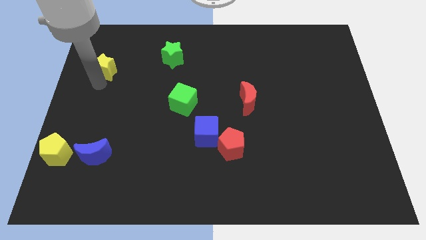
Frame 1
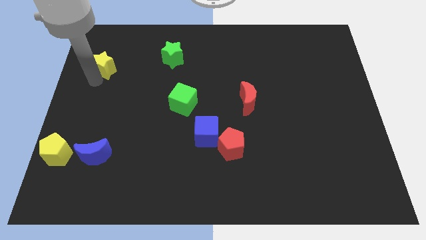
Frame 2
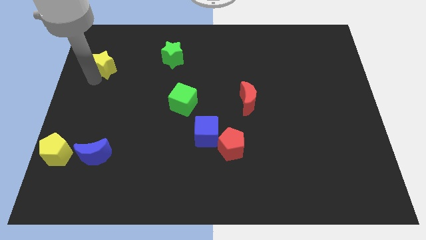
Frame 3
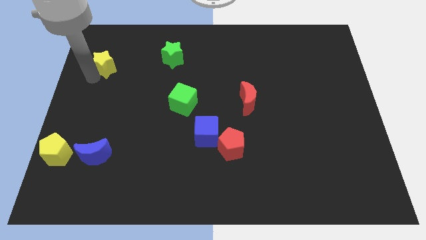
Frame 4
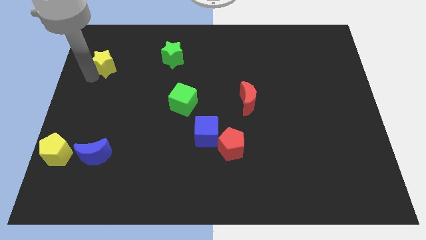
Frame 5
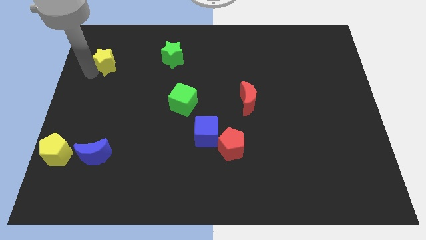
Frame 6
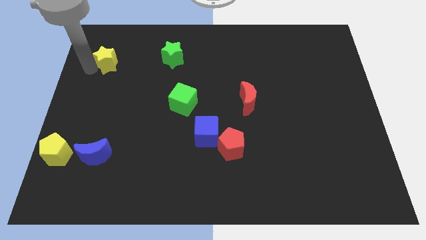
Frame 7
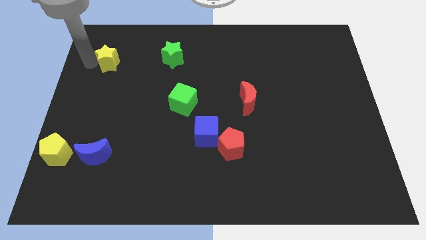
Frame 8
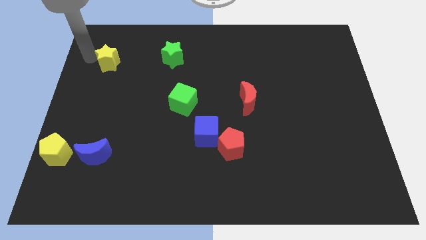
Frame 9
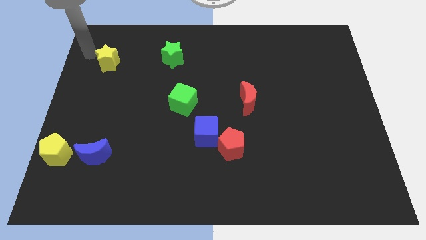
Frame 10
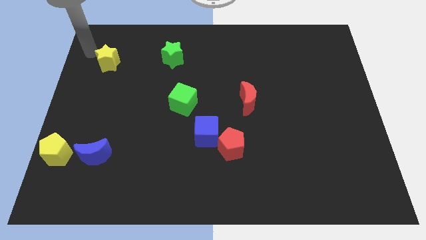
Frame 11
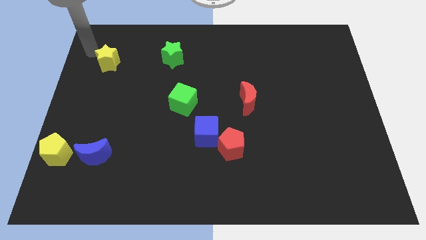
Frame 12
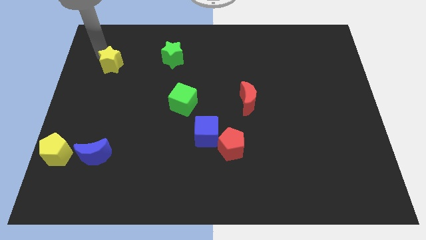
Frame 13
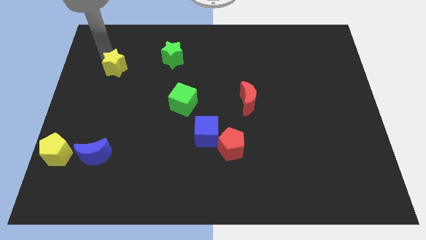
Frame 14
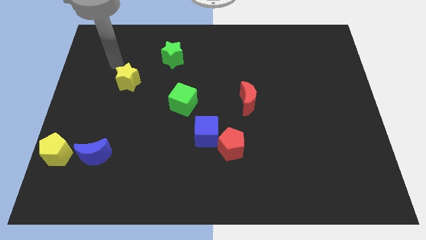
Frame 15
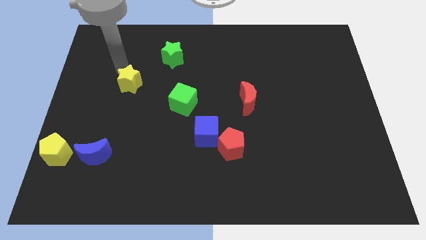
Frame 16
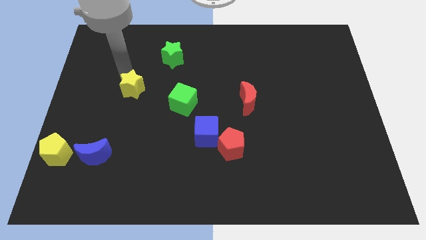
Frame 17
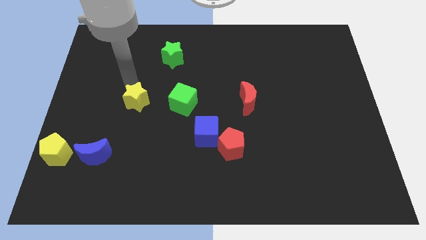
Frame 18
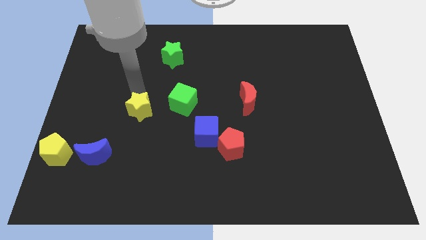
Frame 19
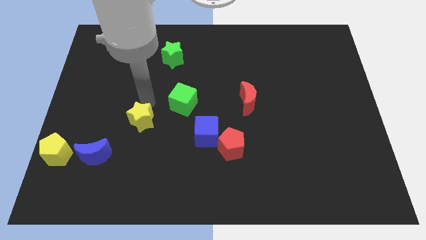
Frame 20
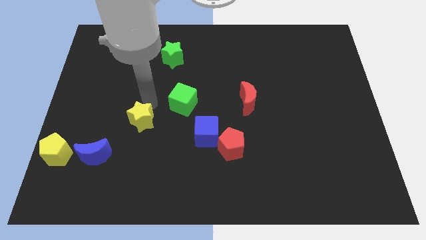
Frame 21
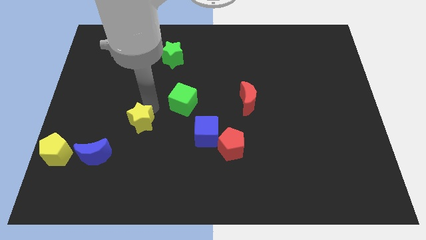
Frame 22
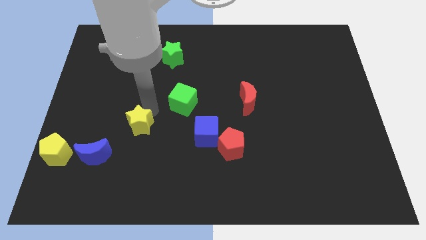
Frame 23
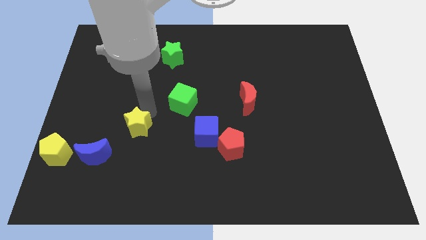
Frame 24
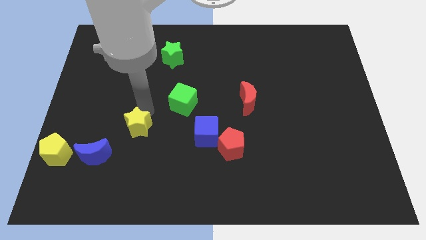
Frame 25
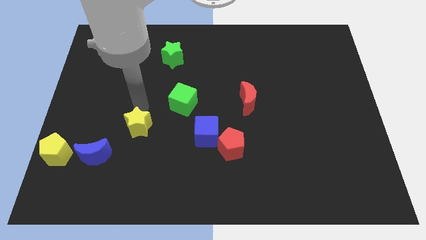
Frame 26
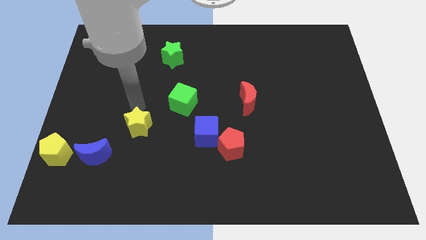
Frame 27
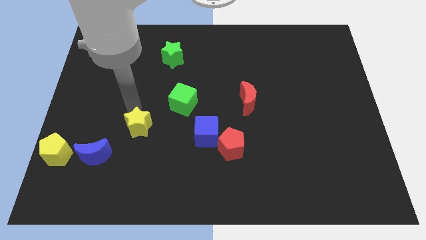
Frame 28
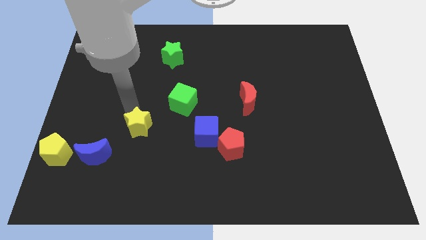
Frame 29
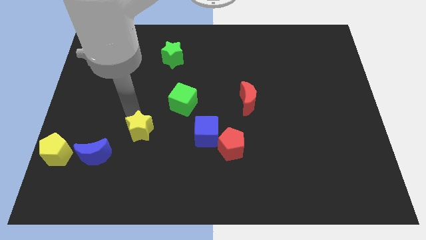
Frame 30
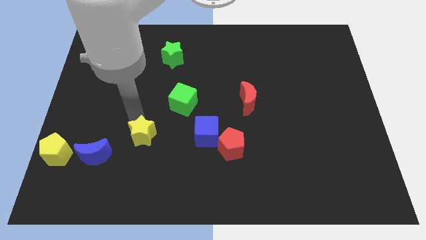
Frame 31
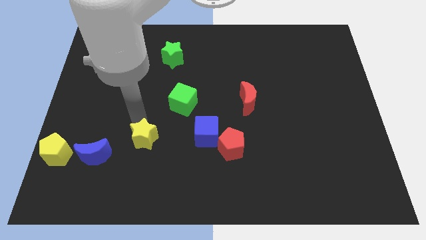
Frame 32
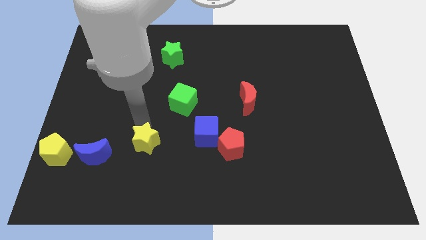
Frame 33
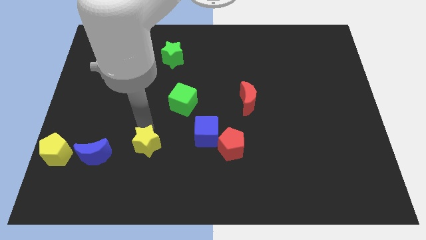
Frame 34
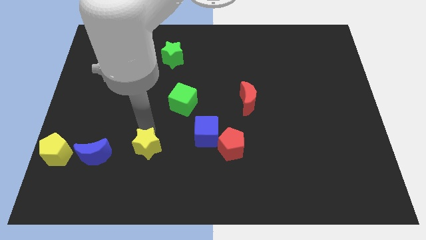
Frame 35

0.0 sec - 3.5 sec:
place the yellow star in between the blue blocks

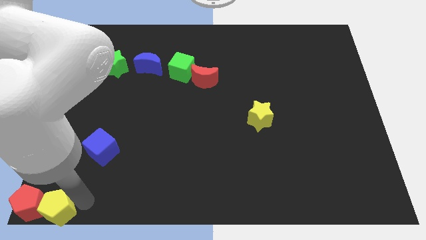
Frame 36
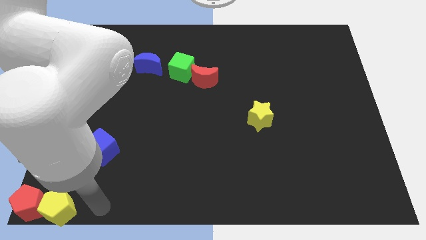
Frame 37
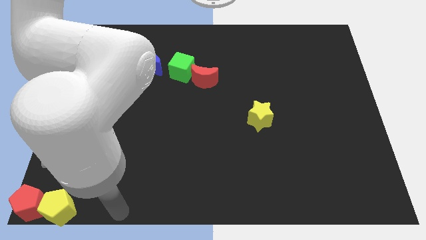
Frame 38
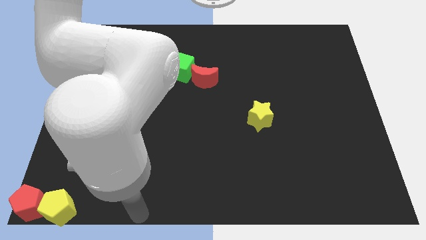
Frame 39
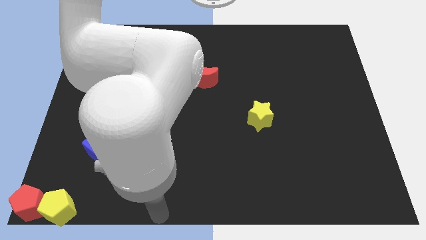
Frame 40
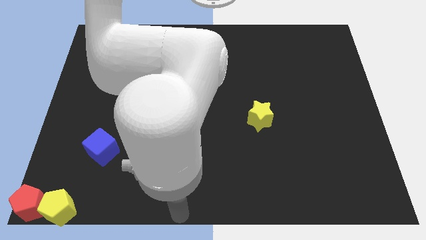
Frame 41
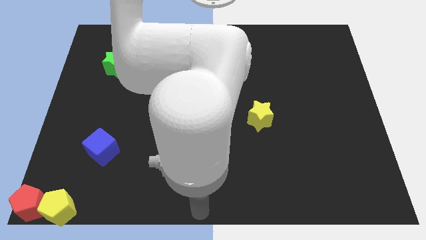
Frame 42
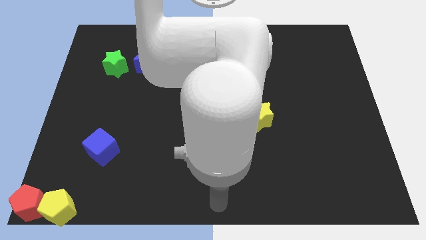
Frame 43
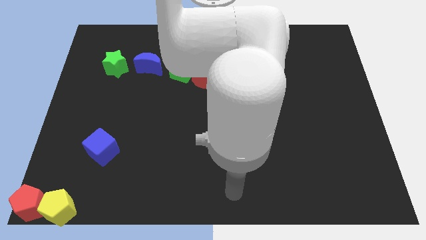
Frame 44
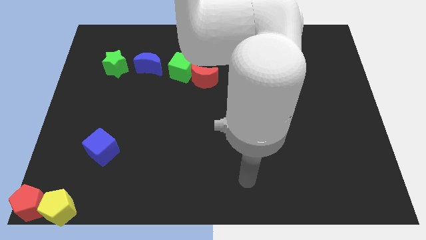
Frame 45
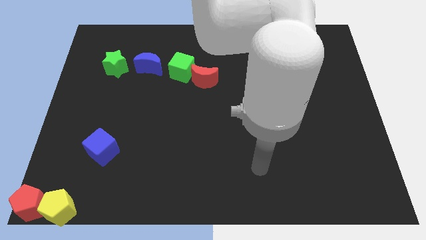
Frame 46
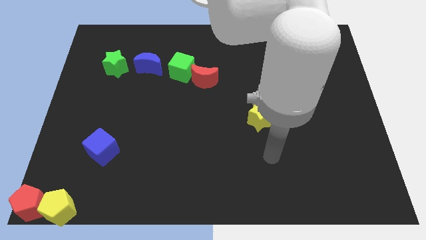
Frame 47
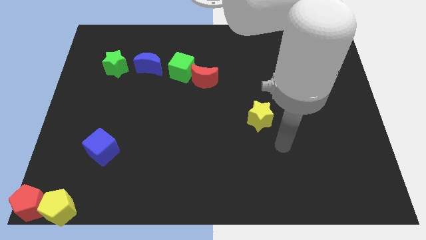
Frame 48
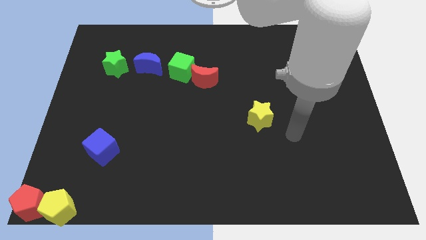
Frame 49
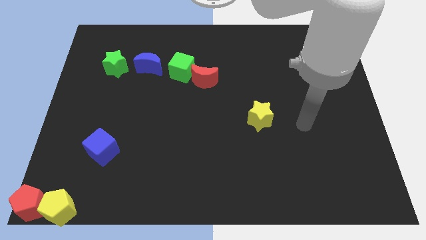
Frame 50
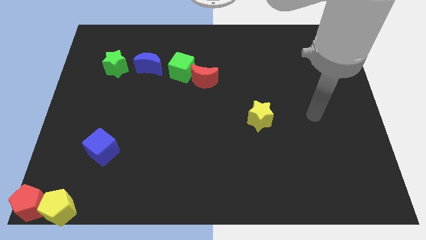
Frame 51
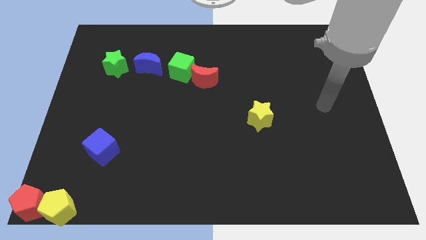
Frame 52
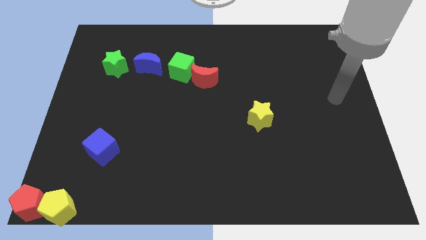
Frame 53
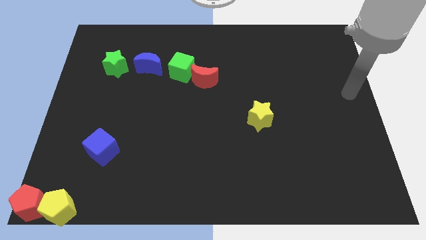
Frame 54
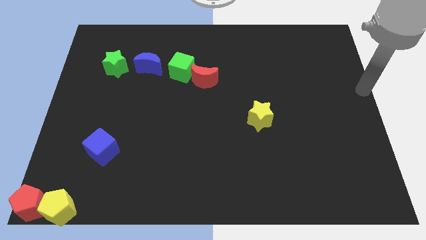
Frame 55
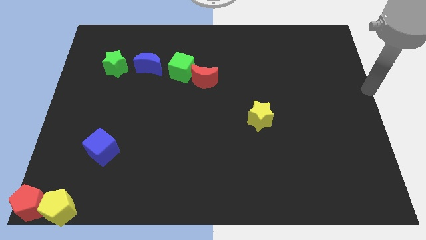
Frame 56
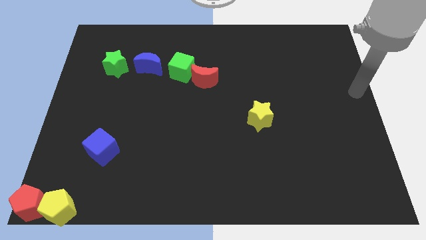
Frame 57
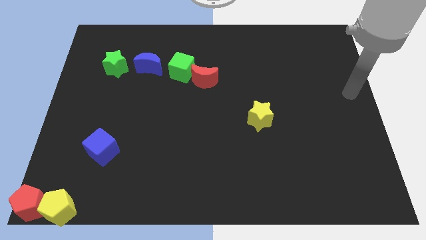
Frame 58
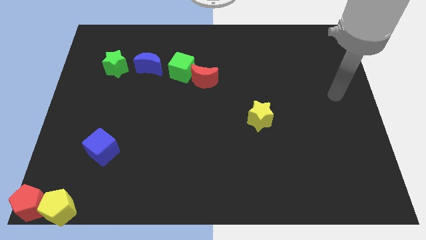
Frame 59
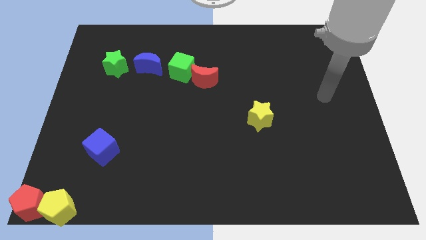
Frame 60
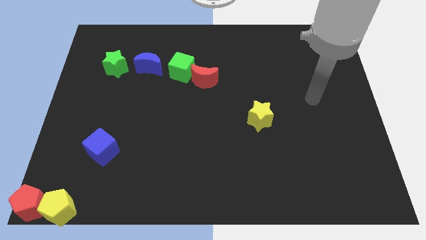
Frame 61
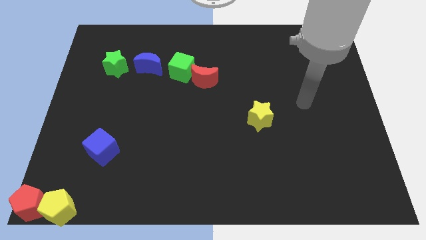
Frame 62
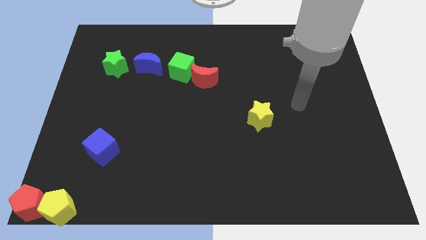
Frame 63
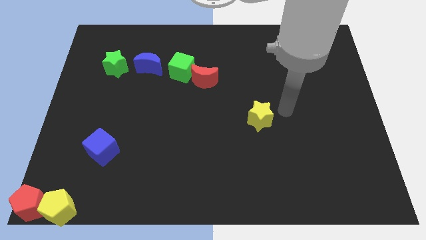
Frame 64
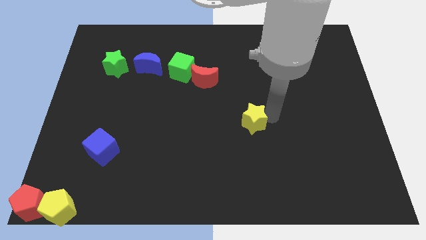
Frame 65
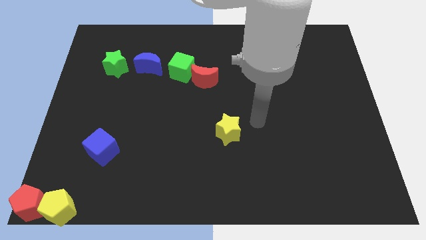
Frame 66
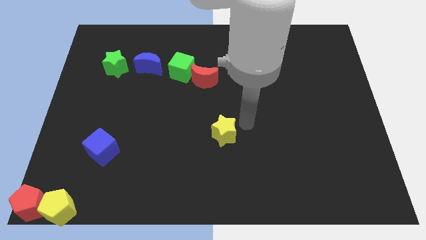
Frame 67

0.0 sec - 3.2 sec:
move your arm around the yellow star

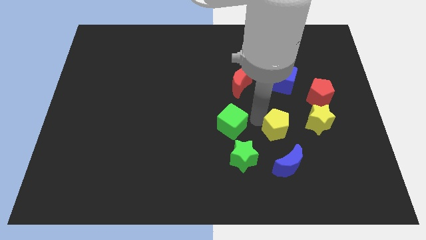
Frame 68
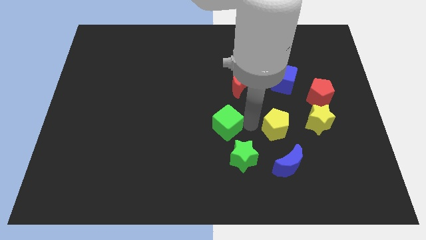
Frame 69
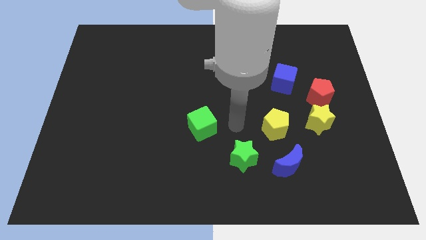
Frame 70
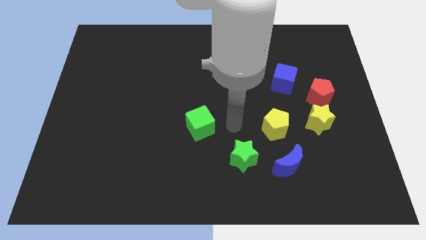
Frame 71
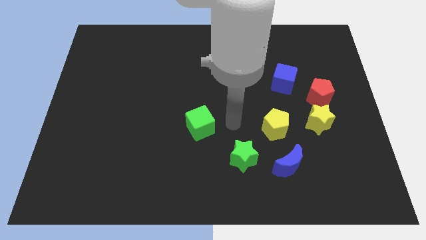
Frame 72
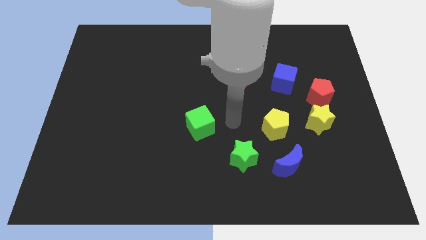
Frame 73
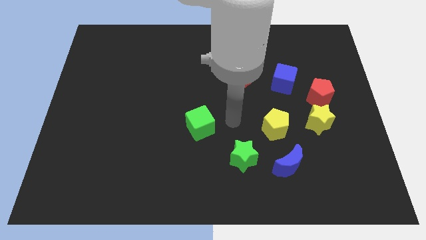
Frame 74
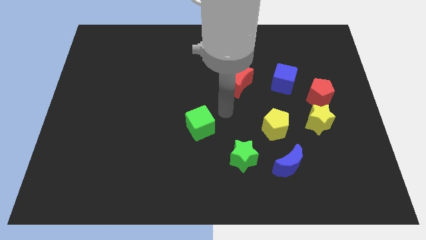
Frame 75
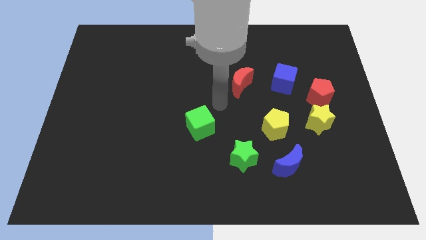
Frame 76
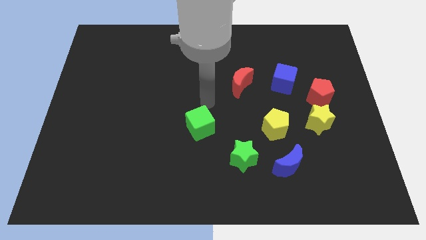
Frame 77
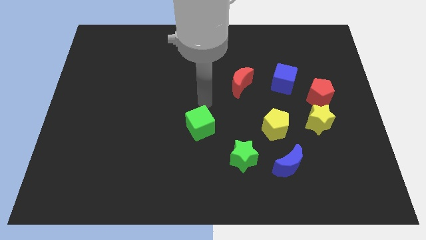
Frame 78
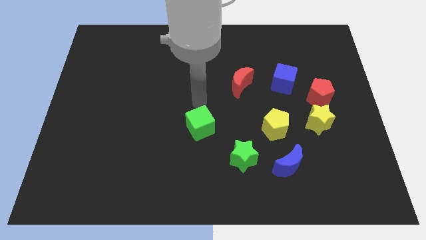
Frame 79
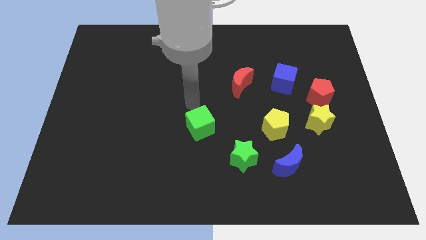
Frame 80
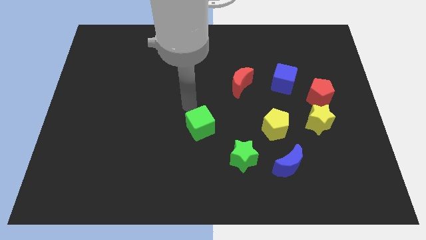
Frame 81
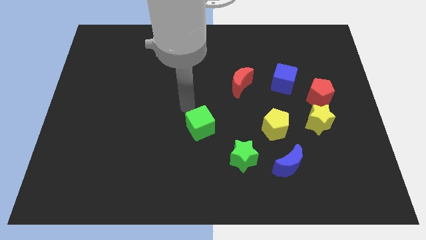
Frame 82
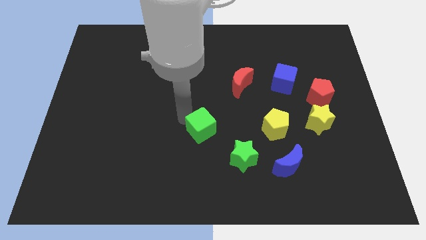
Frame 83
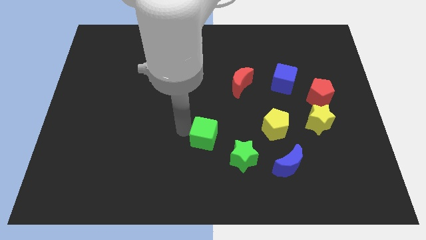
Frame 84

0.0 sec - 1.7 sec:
separate green cube from the yellow pentagon

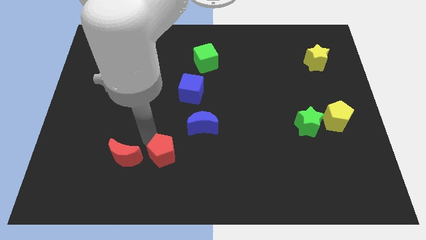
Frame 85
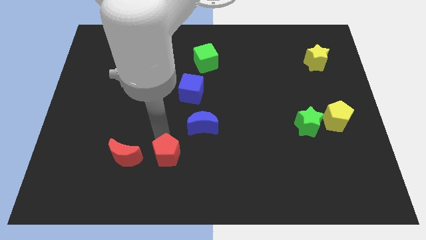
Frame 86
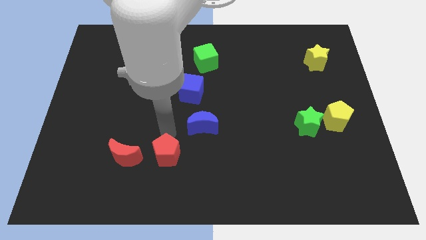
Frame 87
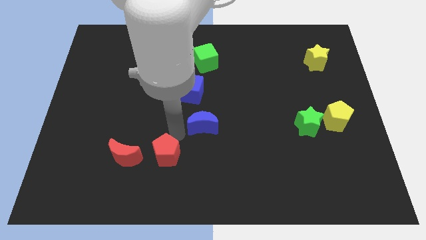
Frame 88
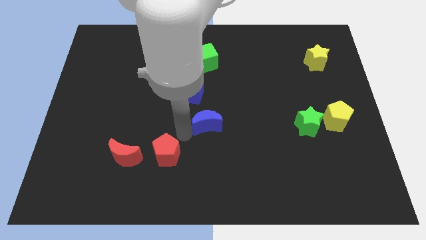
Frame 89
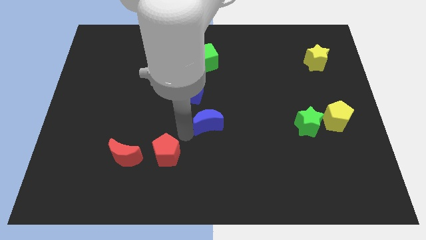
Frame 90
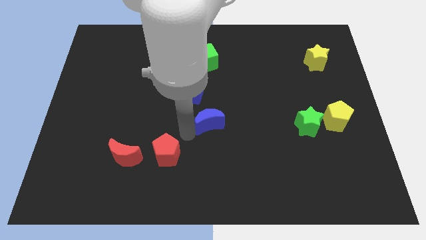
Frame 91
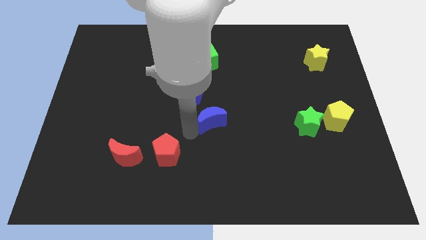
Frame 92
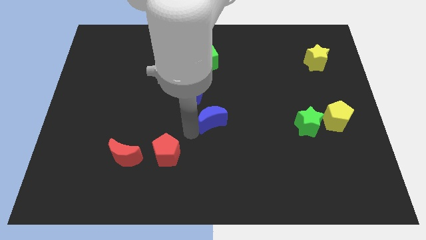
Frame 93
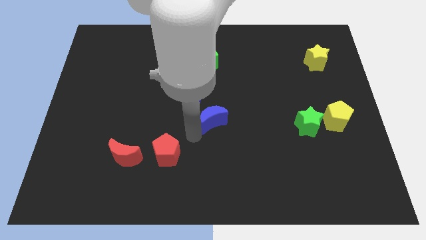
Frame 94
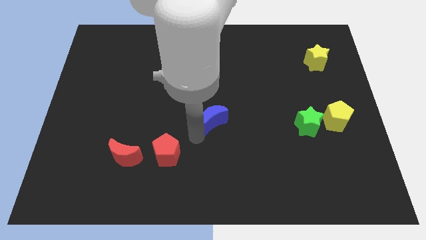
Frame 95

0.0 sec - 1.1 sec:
place the blue moon diagonal to the blue cube
